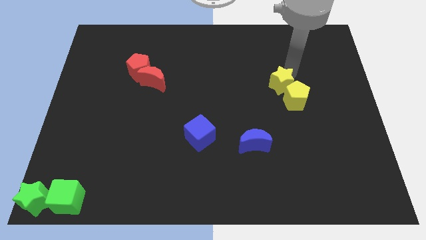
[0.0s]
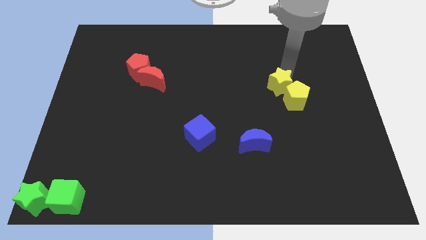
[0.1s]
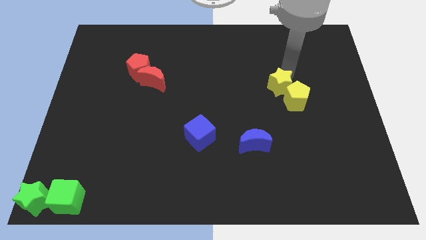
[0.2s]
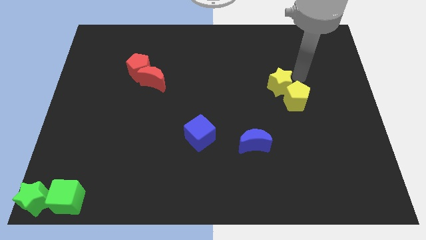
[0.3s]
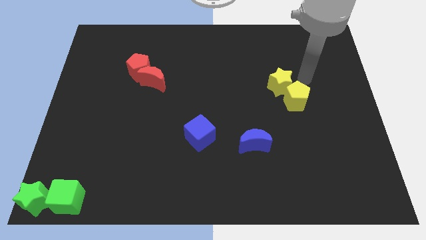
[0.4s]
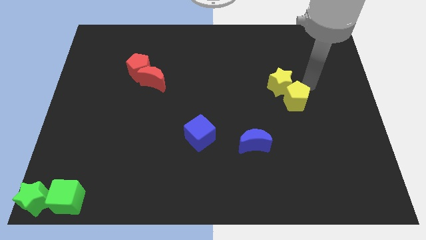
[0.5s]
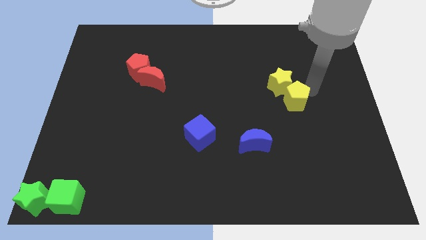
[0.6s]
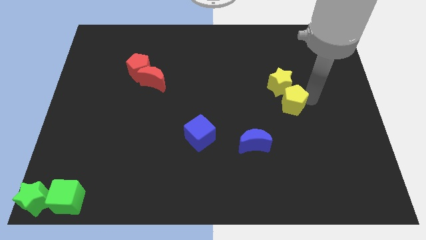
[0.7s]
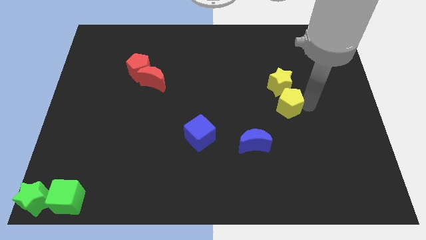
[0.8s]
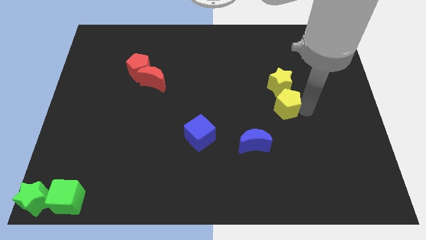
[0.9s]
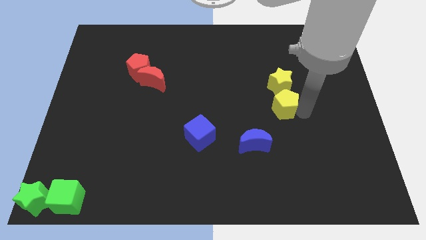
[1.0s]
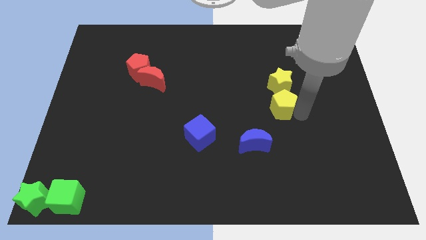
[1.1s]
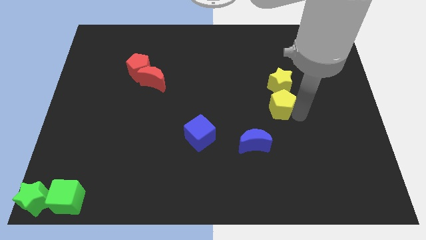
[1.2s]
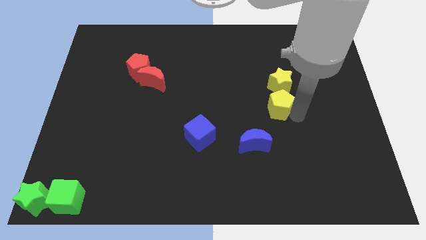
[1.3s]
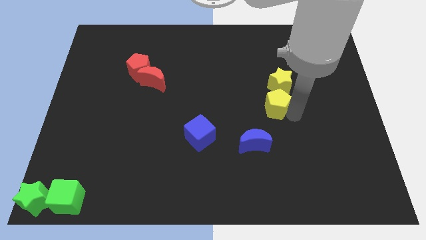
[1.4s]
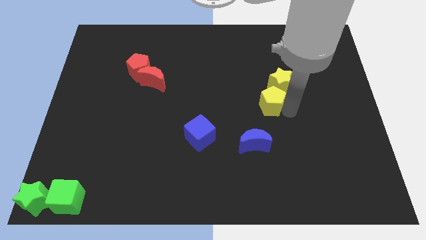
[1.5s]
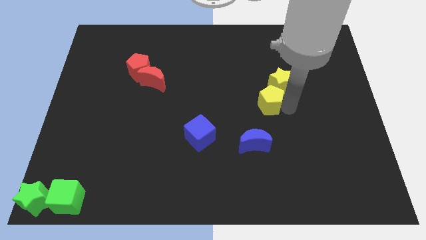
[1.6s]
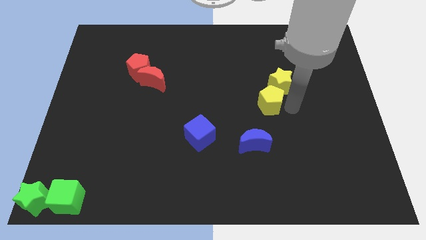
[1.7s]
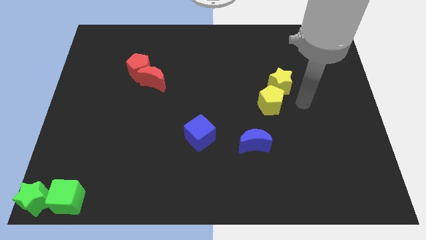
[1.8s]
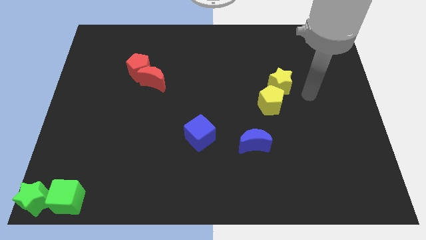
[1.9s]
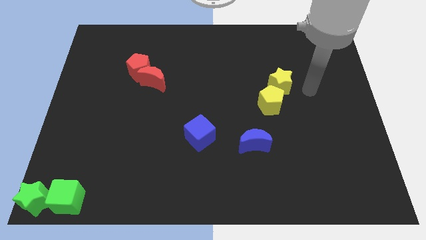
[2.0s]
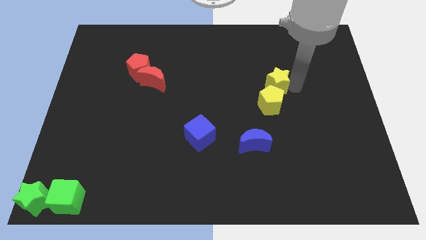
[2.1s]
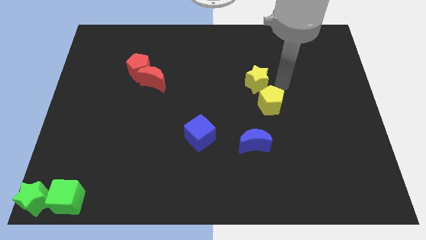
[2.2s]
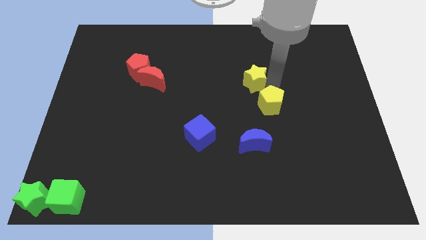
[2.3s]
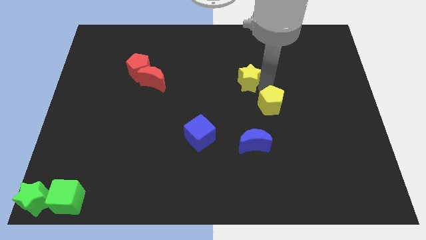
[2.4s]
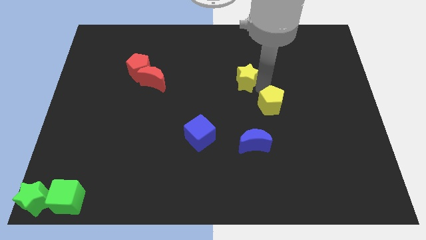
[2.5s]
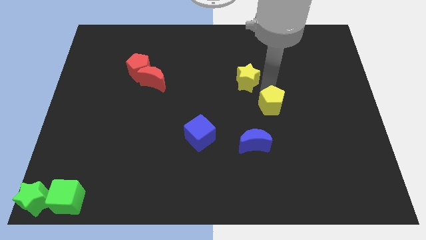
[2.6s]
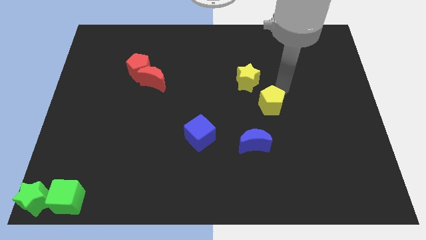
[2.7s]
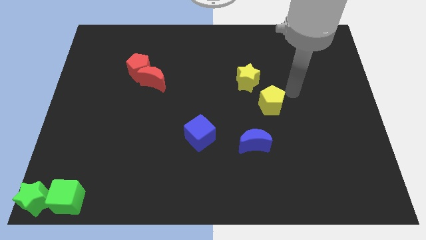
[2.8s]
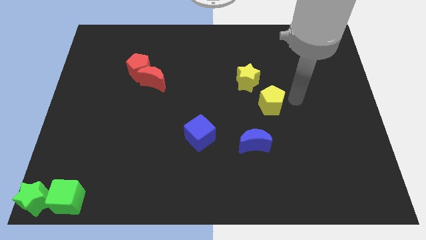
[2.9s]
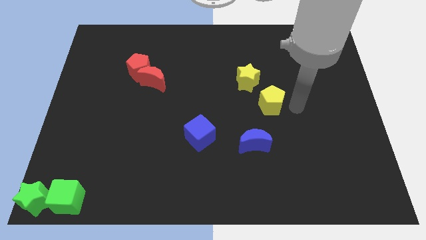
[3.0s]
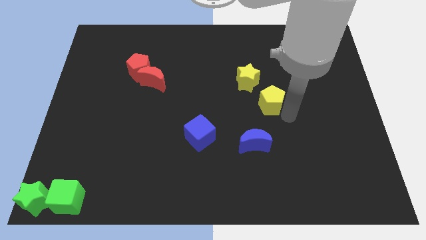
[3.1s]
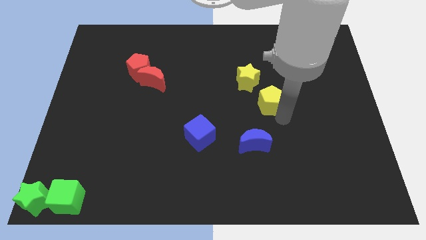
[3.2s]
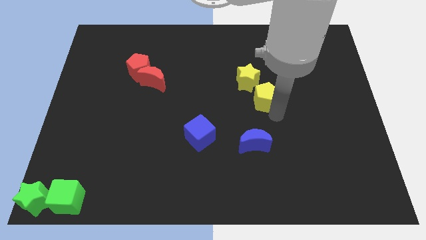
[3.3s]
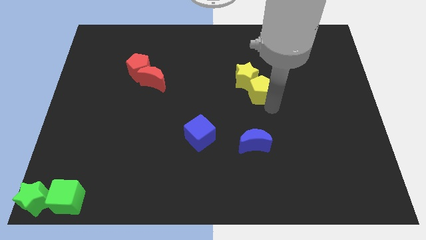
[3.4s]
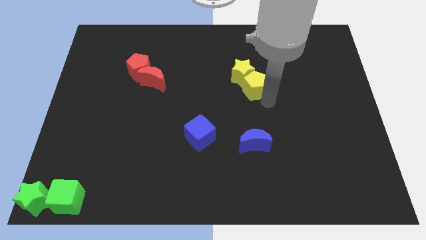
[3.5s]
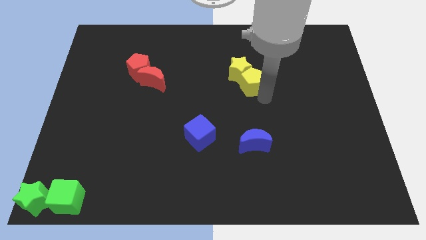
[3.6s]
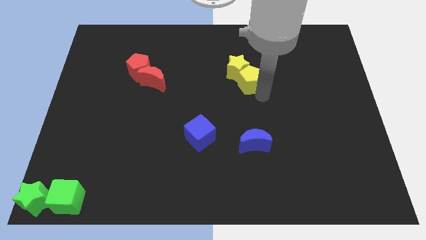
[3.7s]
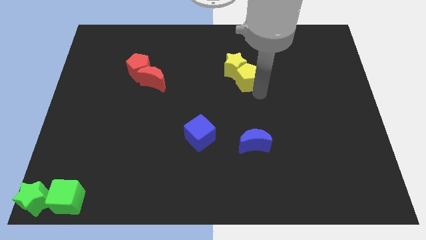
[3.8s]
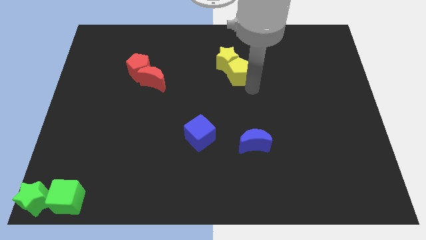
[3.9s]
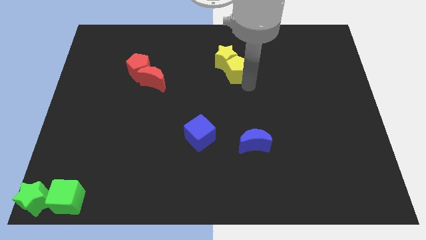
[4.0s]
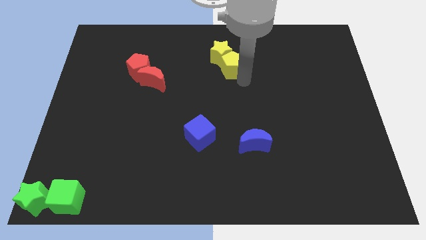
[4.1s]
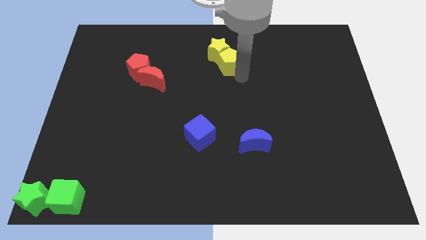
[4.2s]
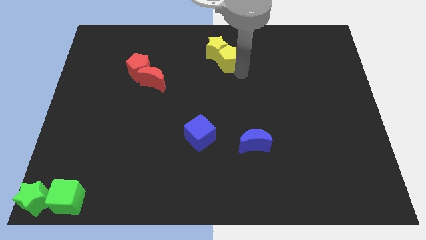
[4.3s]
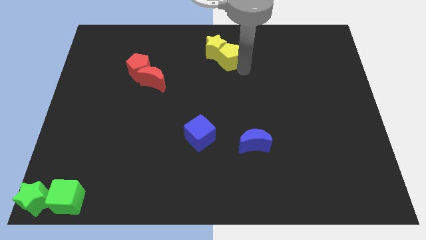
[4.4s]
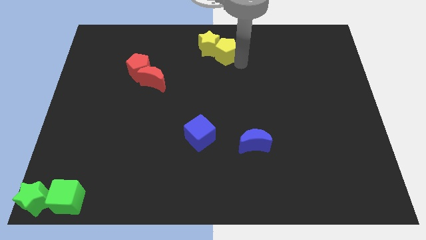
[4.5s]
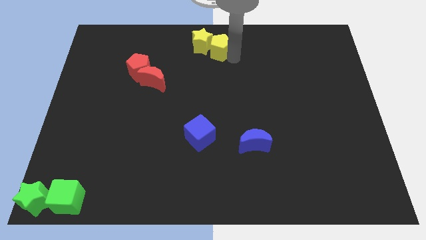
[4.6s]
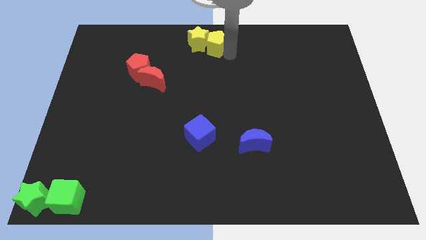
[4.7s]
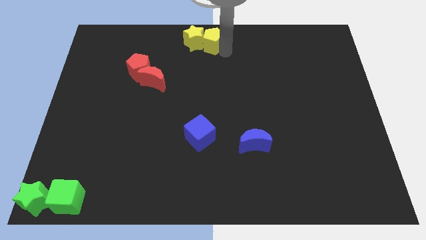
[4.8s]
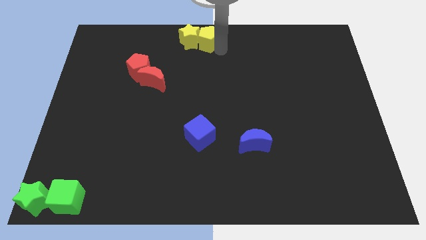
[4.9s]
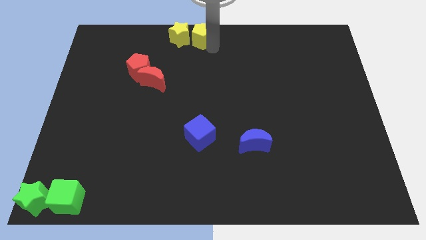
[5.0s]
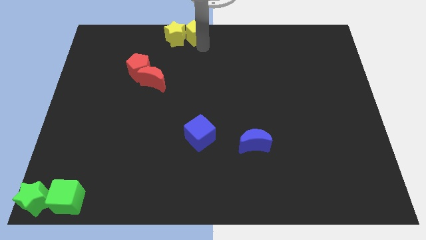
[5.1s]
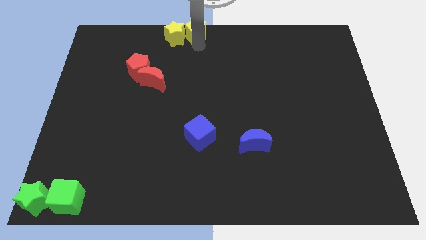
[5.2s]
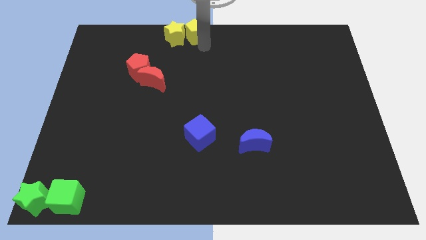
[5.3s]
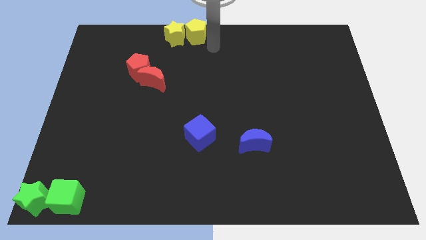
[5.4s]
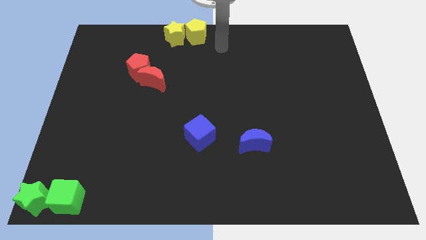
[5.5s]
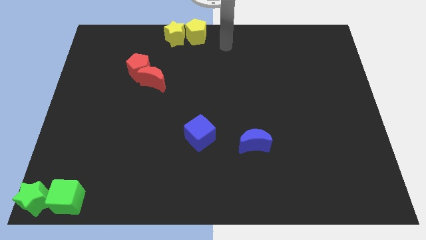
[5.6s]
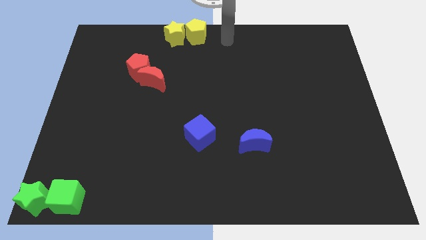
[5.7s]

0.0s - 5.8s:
slide the yellow blocks to the top center

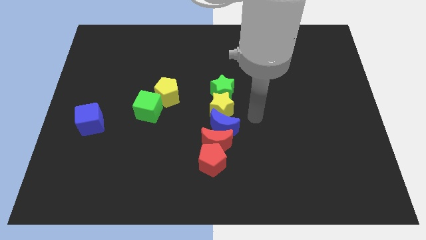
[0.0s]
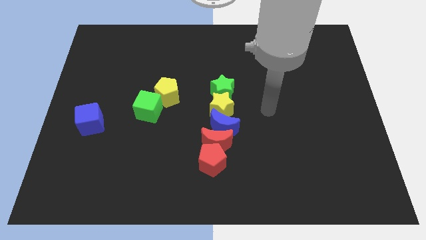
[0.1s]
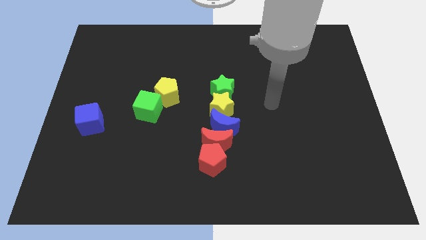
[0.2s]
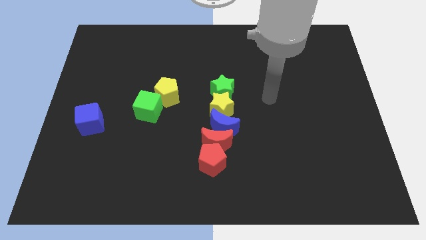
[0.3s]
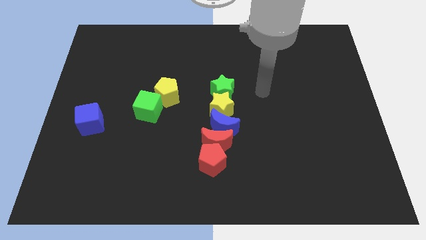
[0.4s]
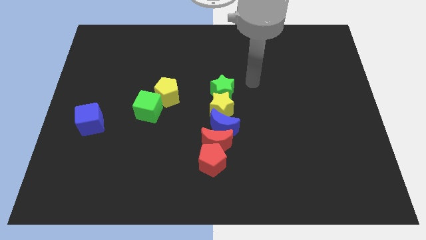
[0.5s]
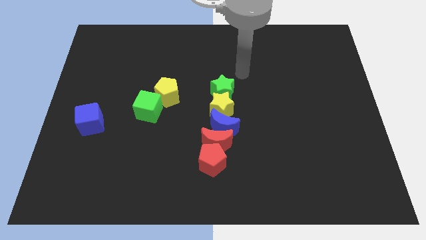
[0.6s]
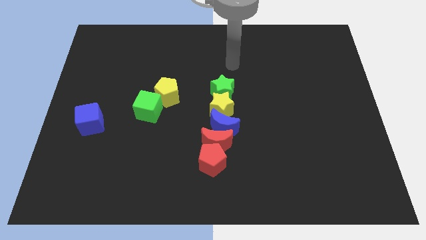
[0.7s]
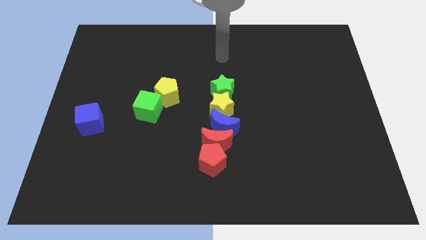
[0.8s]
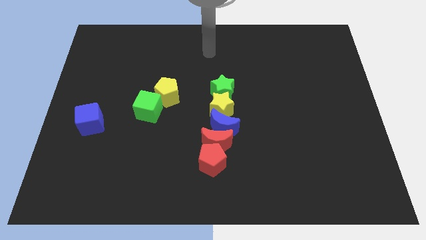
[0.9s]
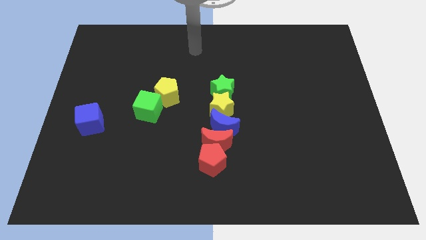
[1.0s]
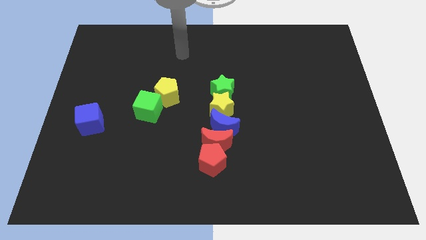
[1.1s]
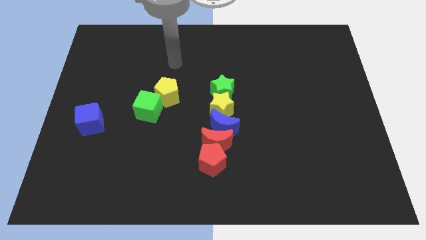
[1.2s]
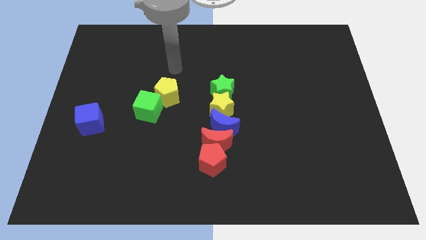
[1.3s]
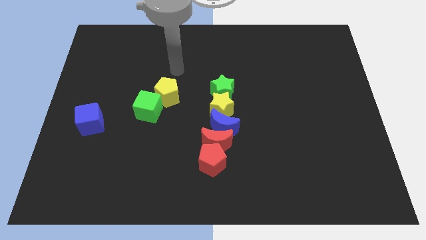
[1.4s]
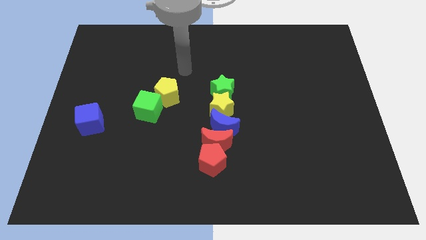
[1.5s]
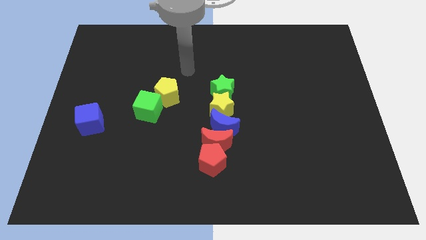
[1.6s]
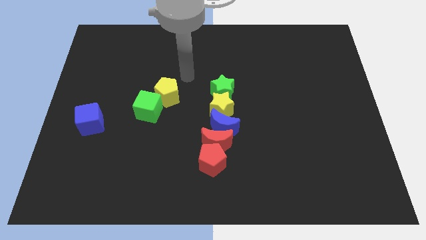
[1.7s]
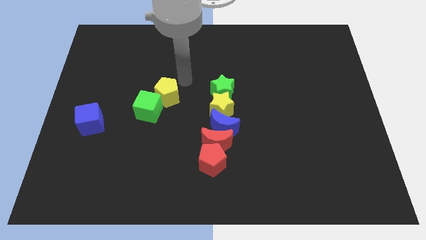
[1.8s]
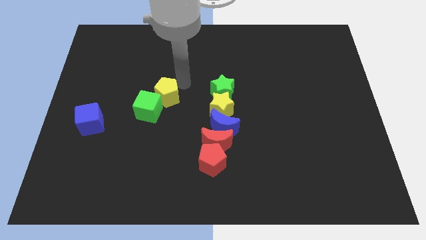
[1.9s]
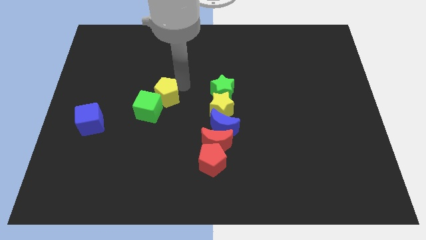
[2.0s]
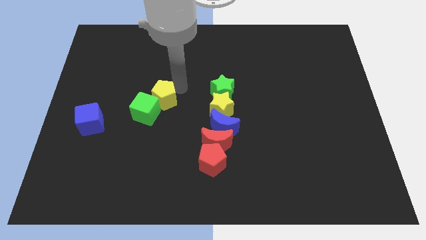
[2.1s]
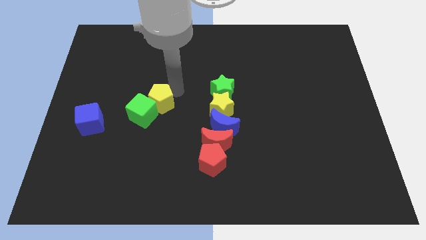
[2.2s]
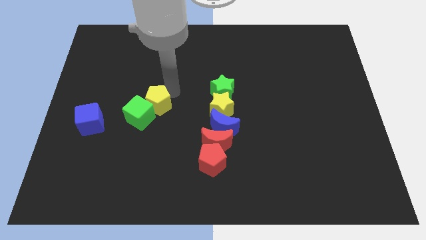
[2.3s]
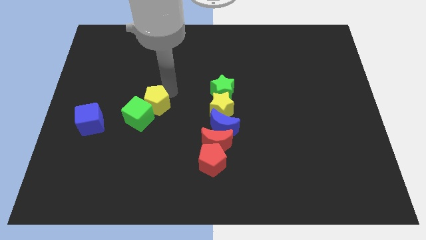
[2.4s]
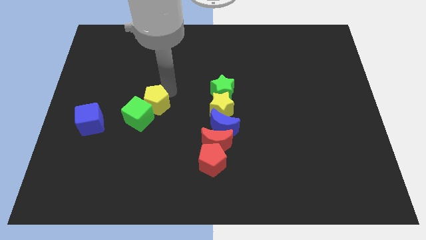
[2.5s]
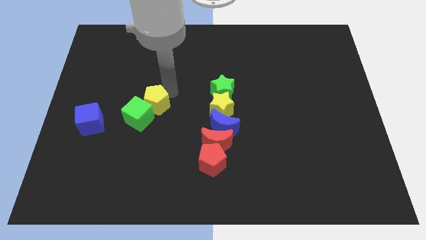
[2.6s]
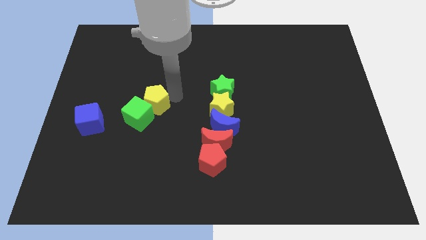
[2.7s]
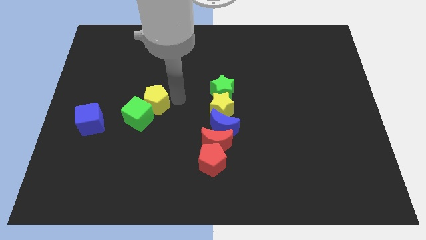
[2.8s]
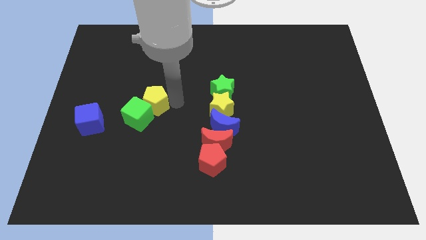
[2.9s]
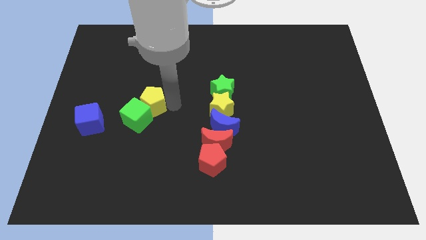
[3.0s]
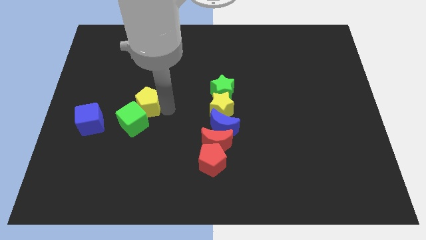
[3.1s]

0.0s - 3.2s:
slightly push the green cube towards left side of the board with yellow pentagon
